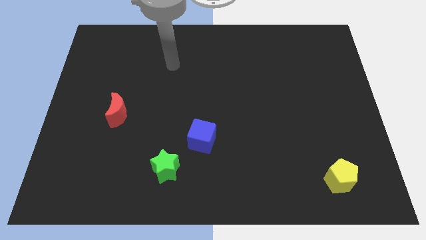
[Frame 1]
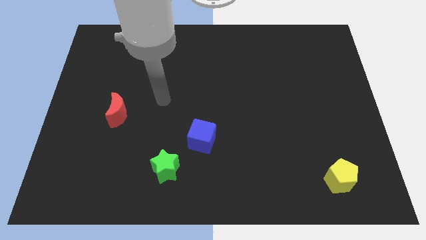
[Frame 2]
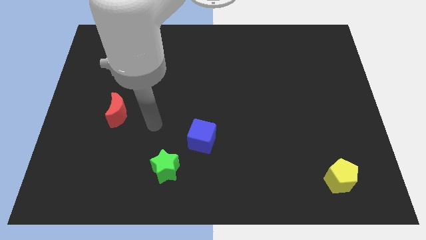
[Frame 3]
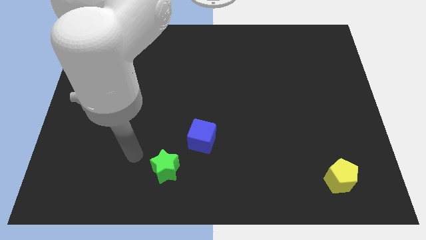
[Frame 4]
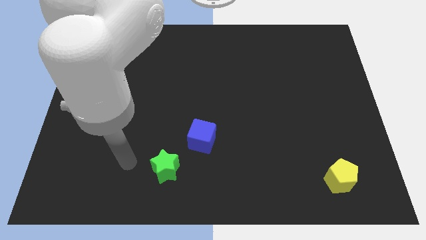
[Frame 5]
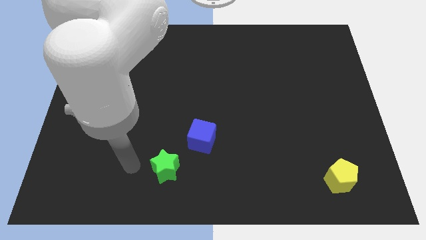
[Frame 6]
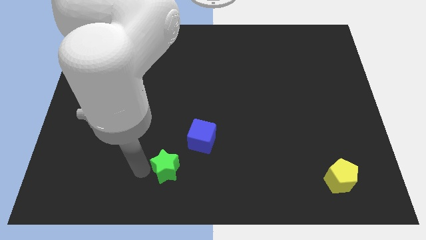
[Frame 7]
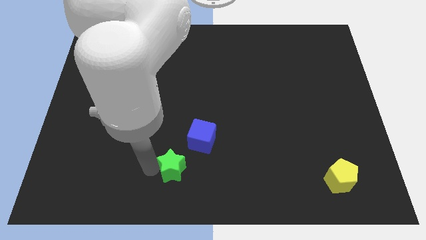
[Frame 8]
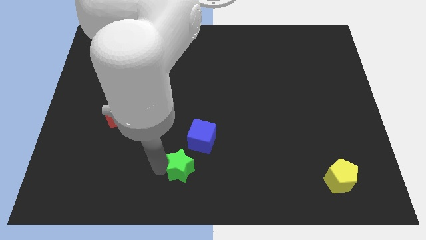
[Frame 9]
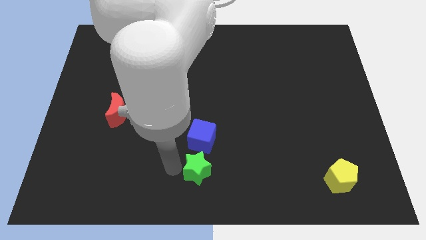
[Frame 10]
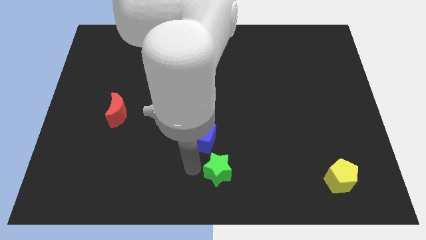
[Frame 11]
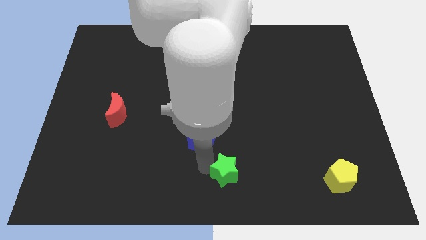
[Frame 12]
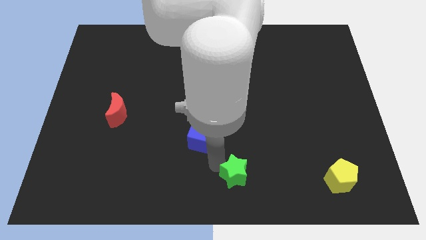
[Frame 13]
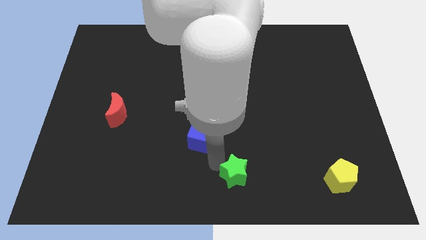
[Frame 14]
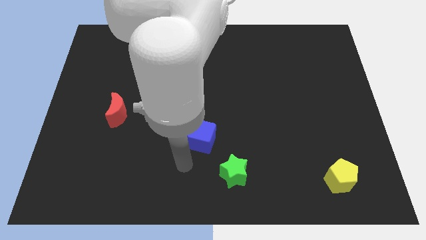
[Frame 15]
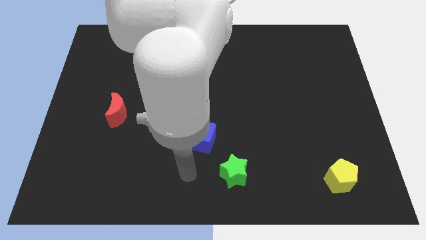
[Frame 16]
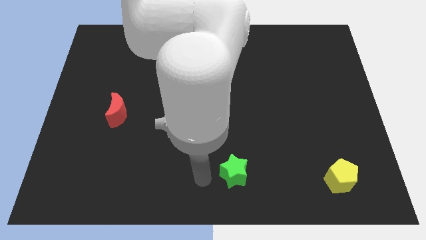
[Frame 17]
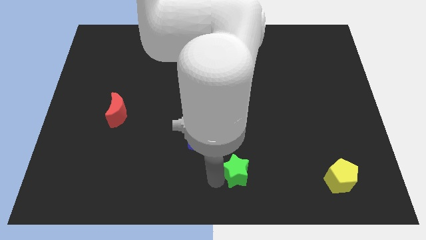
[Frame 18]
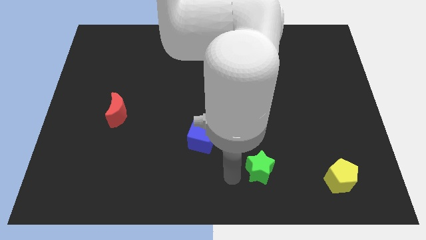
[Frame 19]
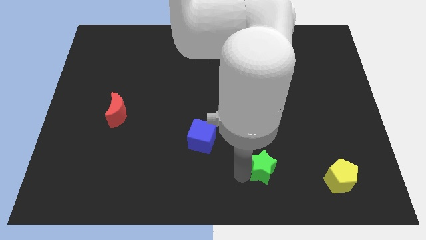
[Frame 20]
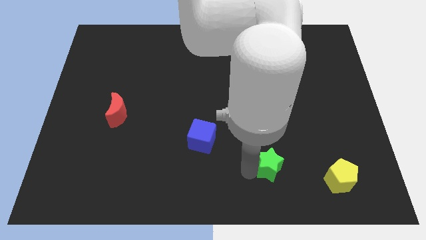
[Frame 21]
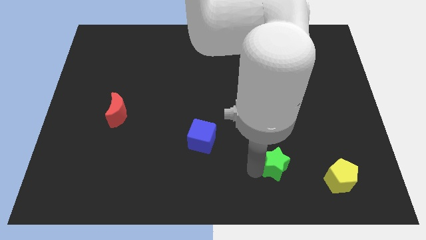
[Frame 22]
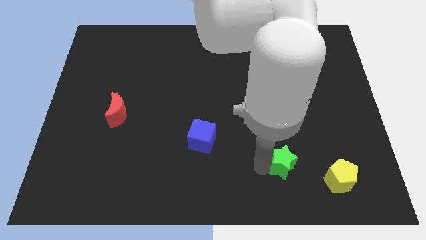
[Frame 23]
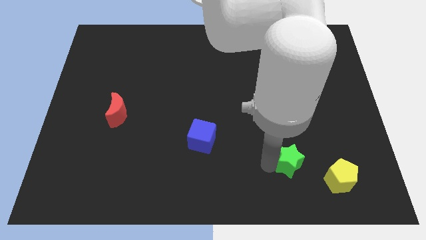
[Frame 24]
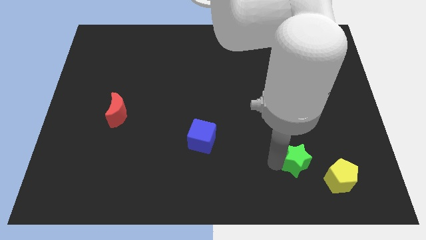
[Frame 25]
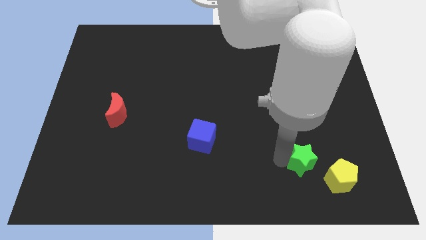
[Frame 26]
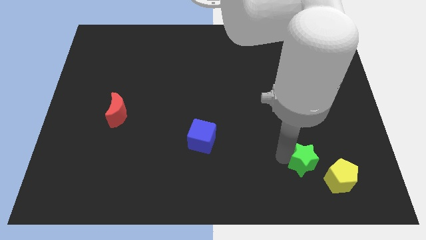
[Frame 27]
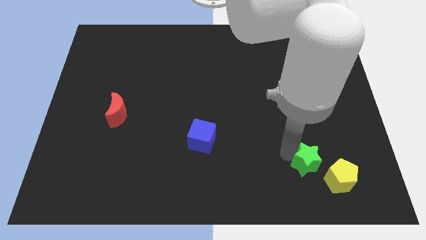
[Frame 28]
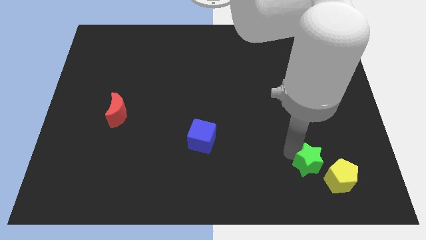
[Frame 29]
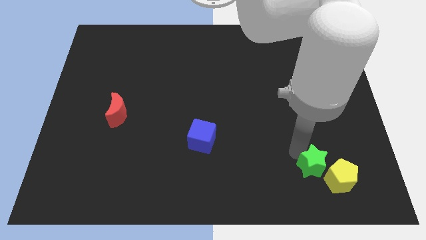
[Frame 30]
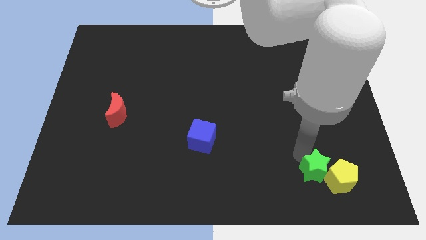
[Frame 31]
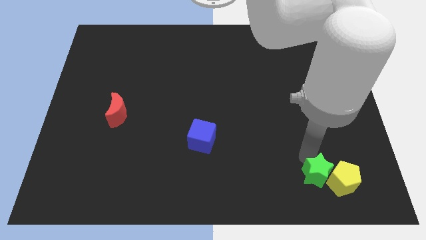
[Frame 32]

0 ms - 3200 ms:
slide the green star close to the yellow pentagon

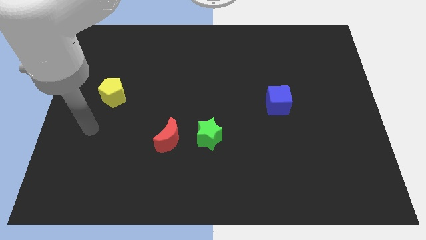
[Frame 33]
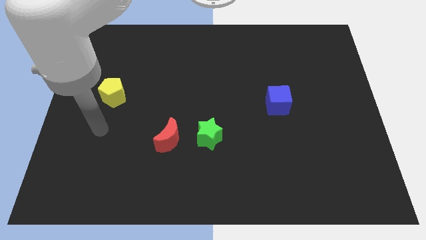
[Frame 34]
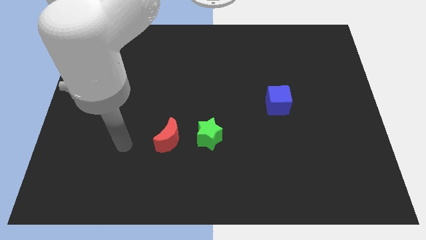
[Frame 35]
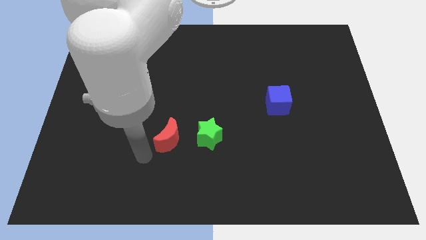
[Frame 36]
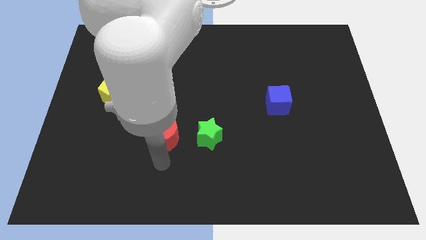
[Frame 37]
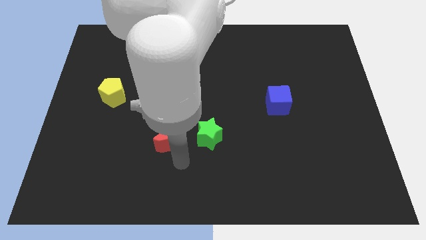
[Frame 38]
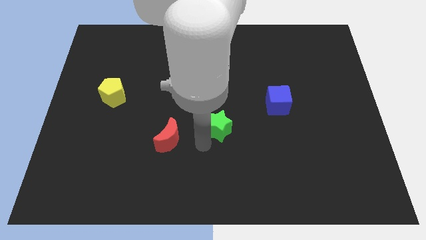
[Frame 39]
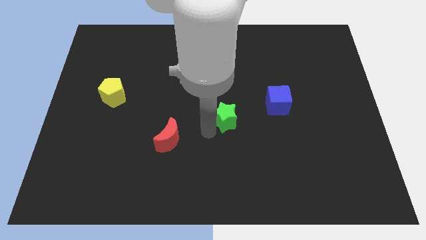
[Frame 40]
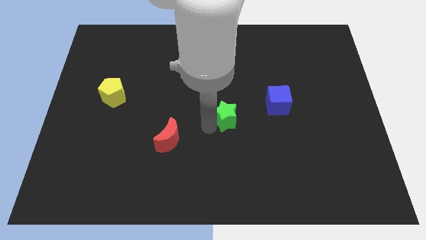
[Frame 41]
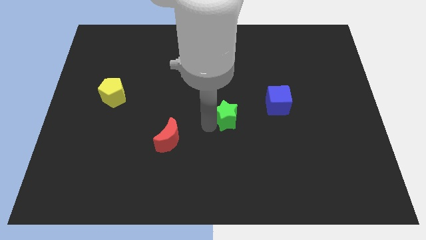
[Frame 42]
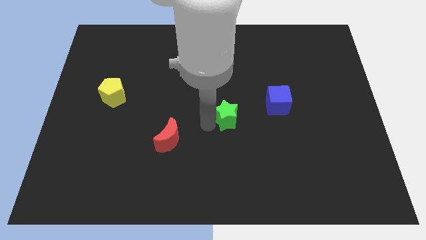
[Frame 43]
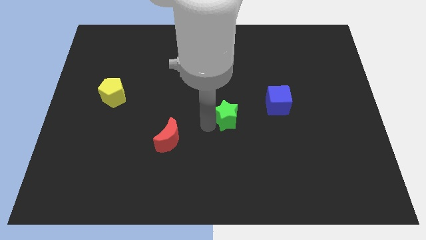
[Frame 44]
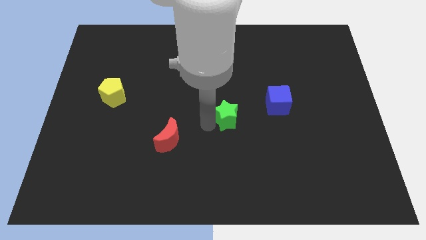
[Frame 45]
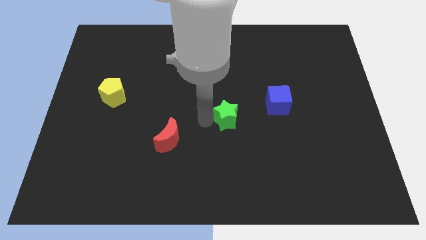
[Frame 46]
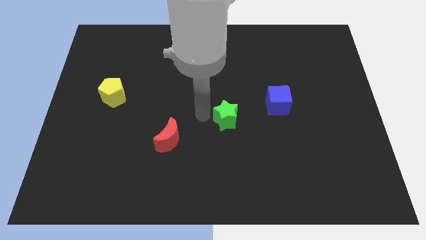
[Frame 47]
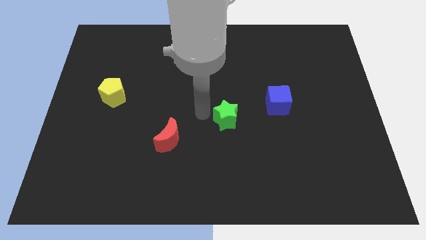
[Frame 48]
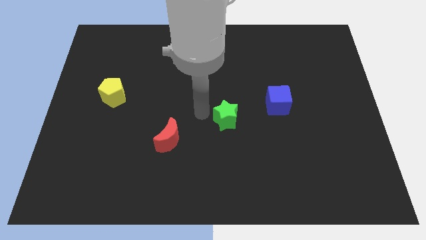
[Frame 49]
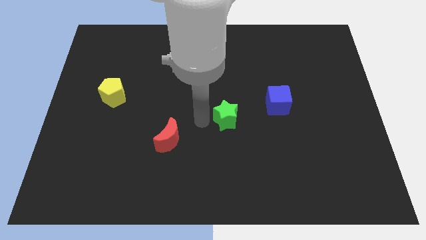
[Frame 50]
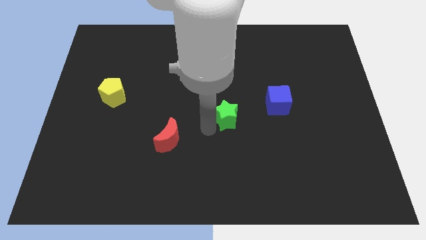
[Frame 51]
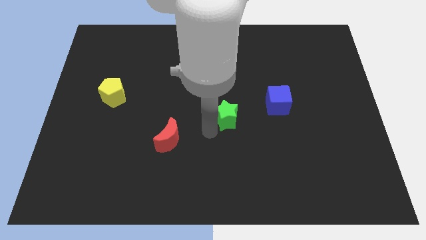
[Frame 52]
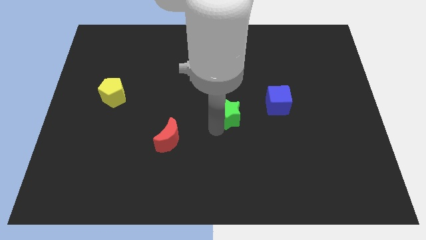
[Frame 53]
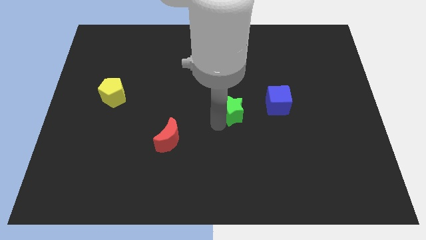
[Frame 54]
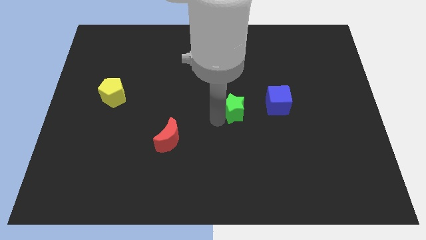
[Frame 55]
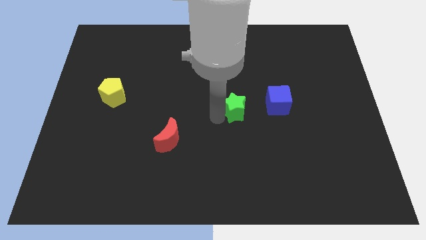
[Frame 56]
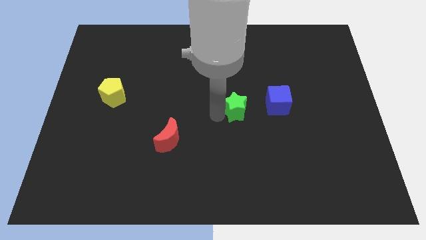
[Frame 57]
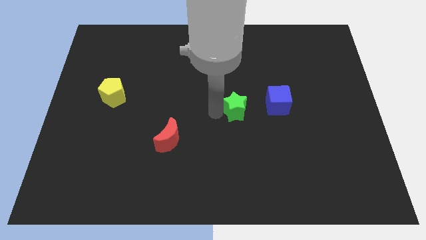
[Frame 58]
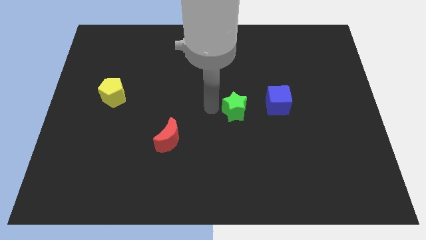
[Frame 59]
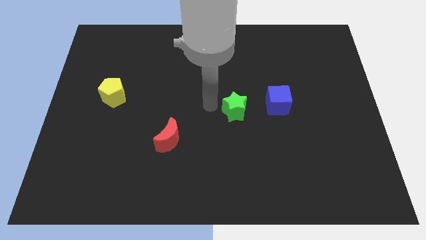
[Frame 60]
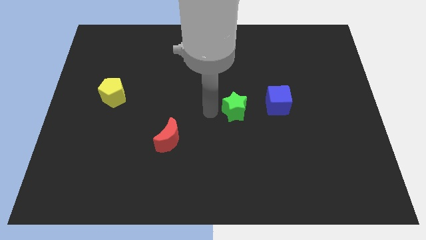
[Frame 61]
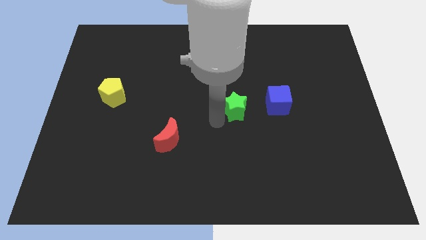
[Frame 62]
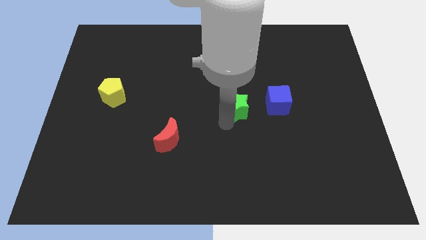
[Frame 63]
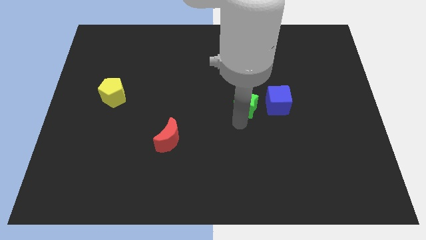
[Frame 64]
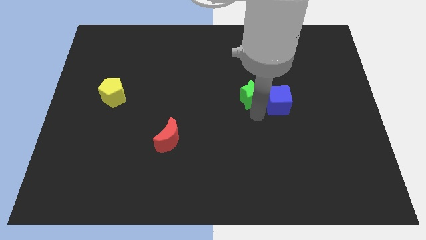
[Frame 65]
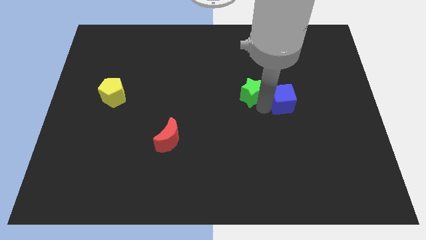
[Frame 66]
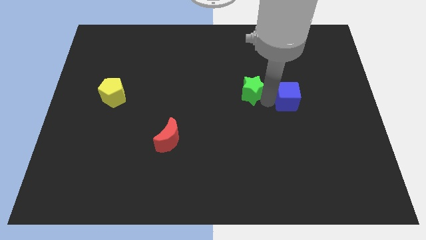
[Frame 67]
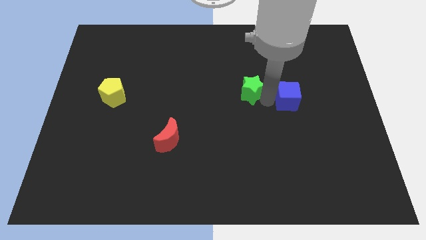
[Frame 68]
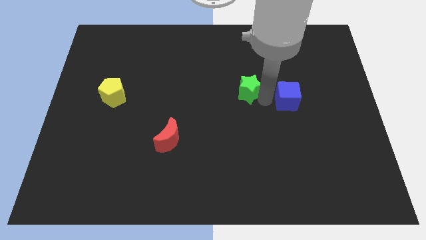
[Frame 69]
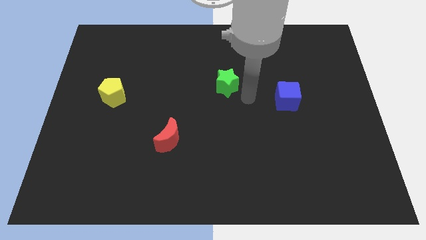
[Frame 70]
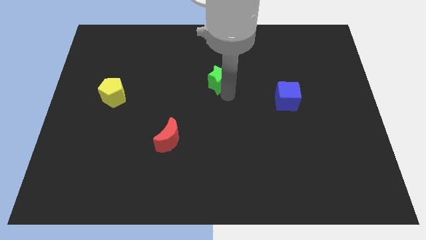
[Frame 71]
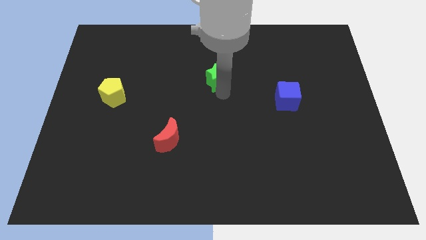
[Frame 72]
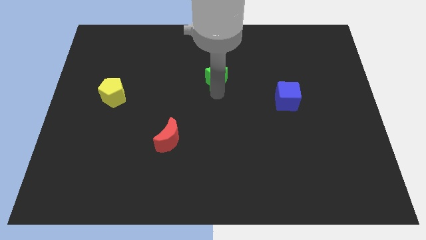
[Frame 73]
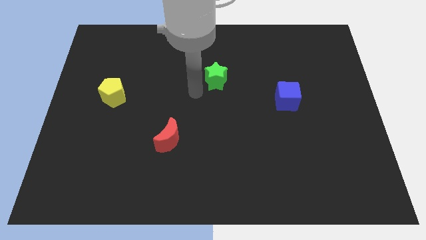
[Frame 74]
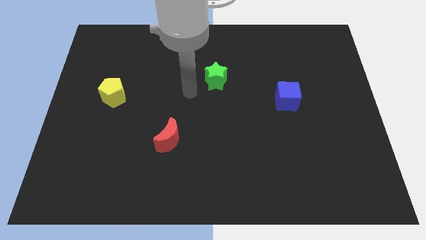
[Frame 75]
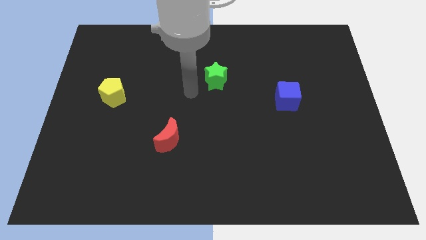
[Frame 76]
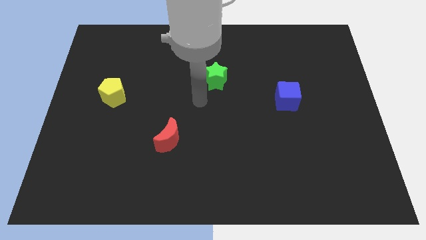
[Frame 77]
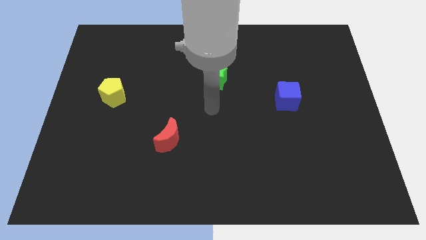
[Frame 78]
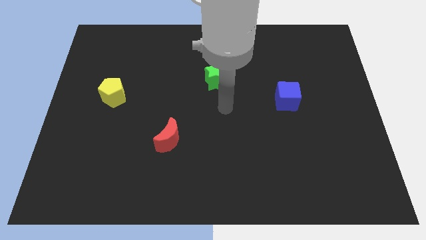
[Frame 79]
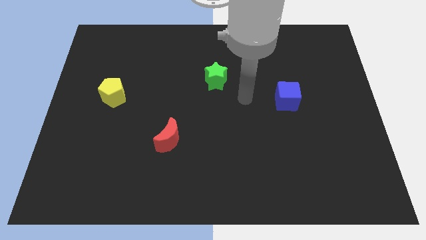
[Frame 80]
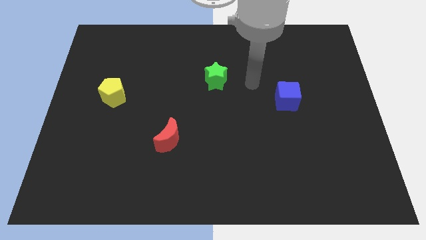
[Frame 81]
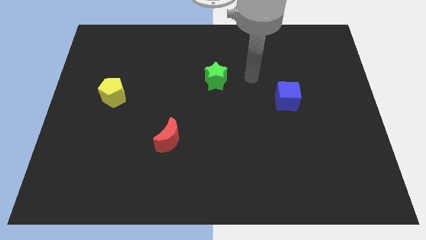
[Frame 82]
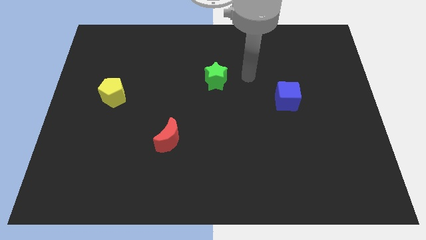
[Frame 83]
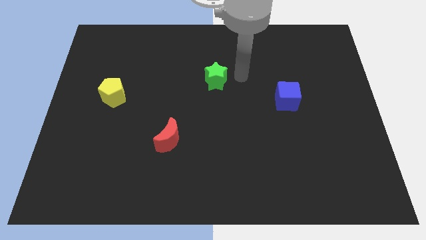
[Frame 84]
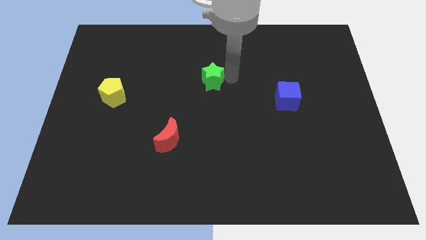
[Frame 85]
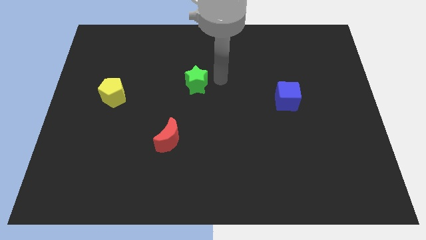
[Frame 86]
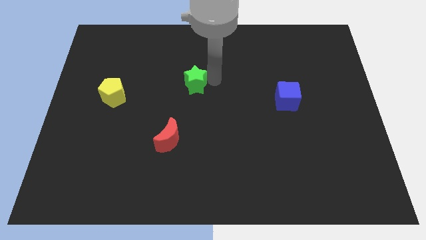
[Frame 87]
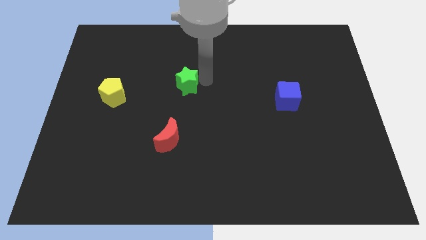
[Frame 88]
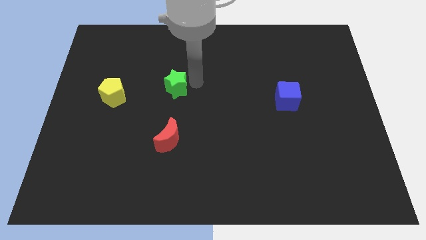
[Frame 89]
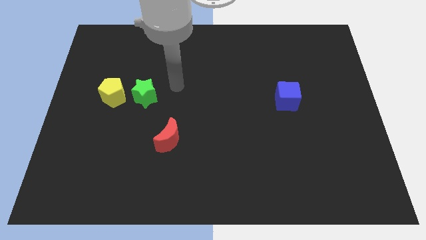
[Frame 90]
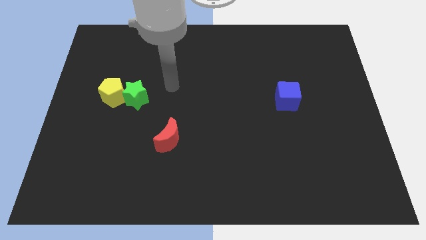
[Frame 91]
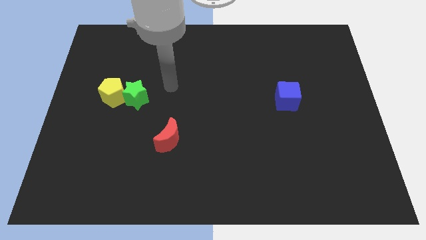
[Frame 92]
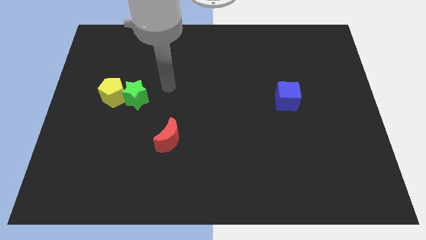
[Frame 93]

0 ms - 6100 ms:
put the green star towards the yellow block
